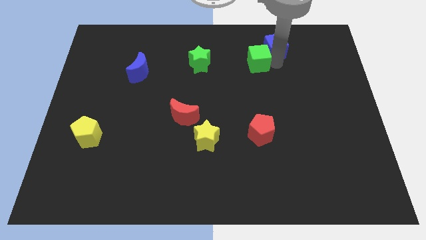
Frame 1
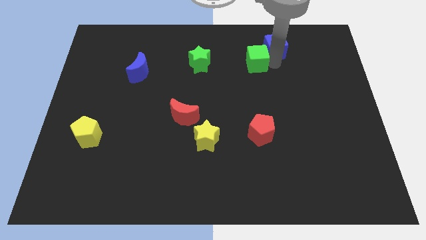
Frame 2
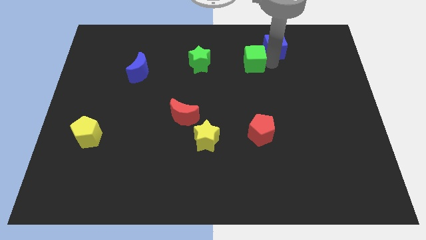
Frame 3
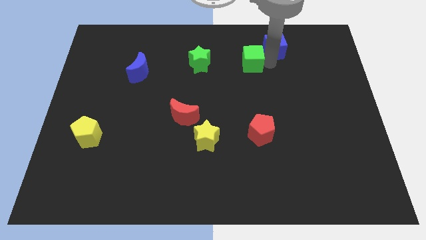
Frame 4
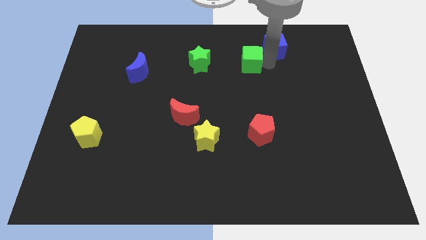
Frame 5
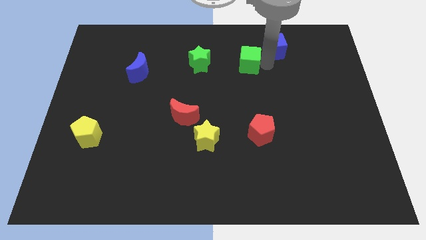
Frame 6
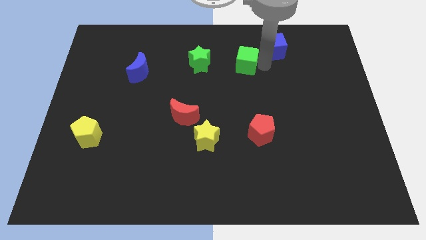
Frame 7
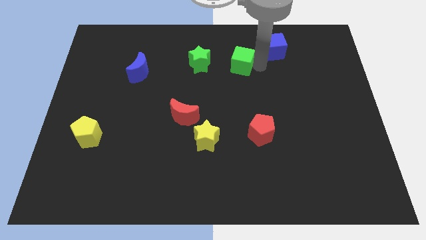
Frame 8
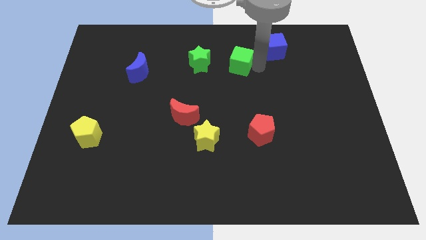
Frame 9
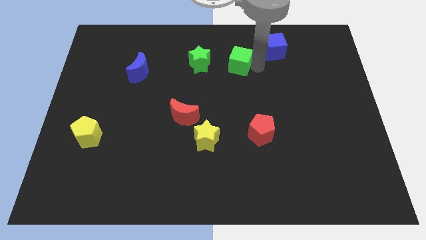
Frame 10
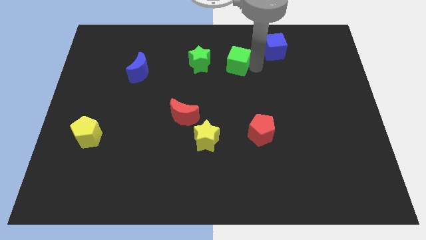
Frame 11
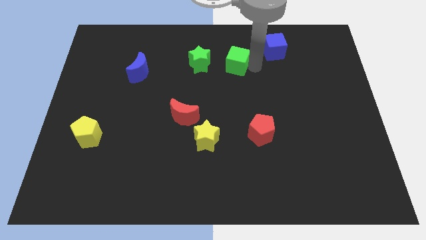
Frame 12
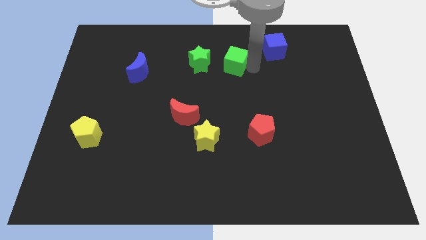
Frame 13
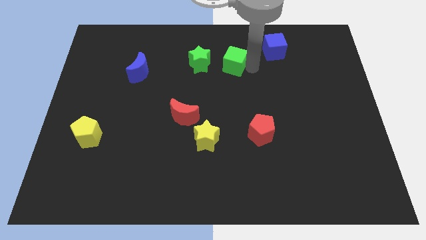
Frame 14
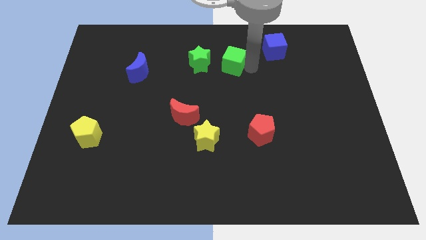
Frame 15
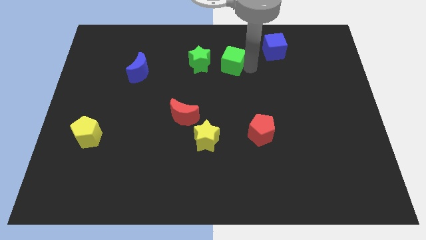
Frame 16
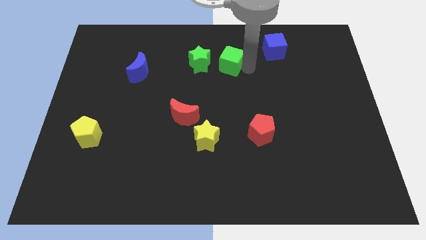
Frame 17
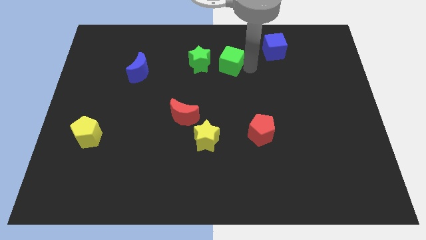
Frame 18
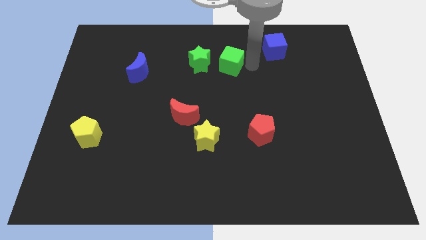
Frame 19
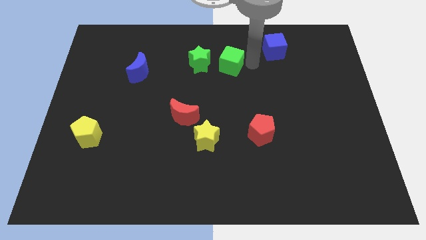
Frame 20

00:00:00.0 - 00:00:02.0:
place the green cube right to the green star

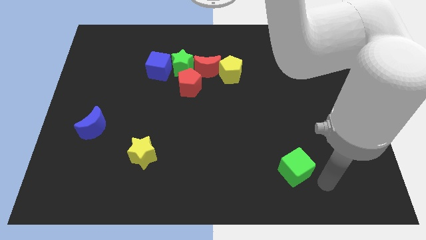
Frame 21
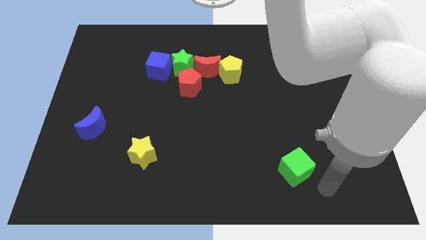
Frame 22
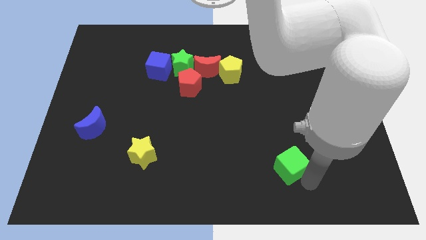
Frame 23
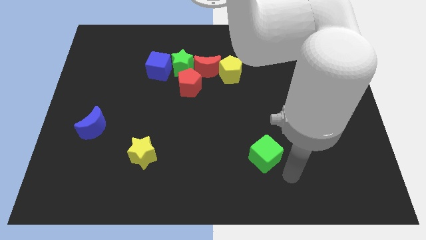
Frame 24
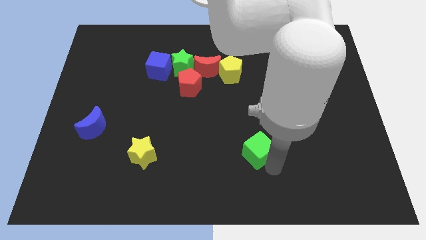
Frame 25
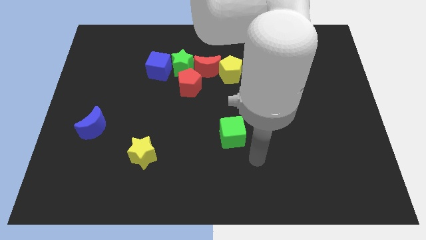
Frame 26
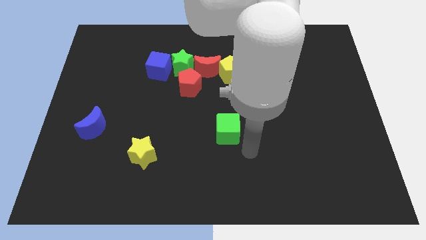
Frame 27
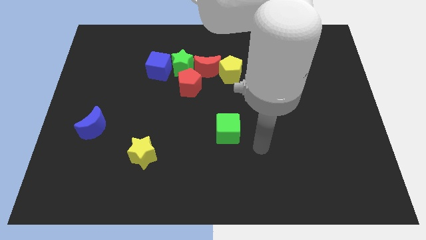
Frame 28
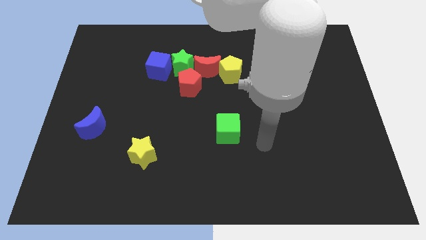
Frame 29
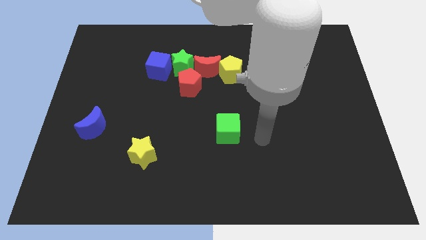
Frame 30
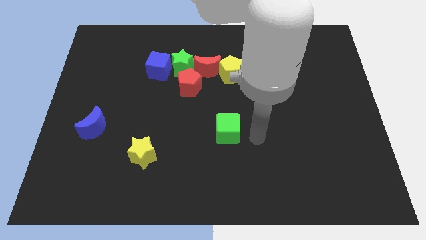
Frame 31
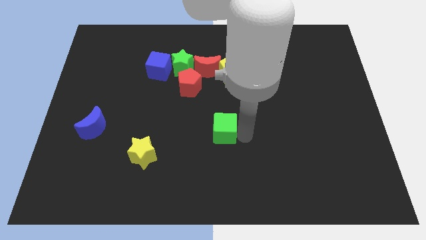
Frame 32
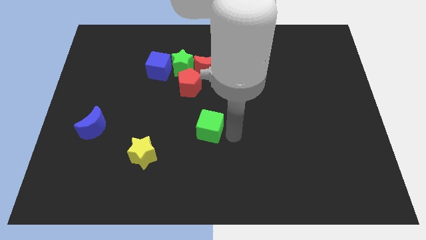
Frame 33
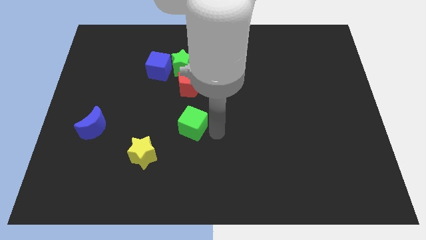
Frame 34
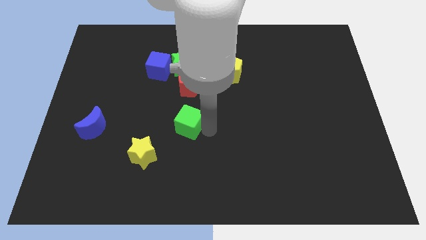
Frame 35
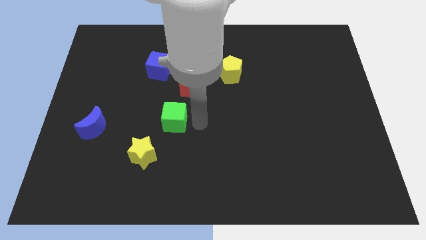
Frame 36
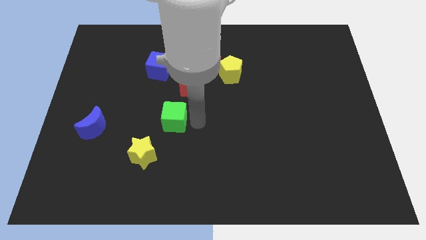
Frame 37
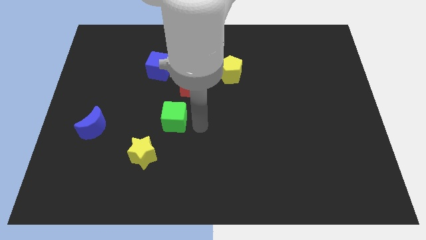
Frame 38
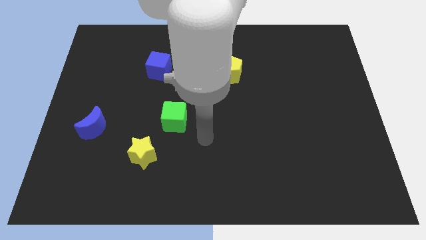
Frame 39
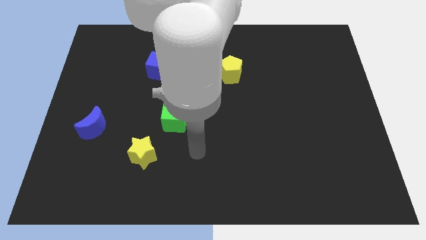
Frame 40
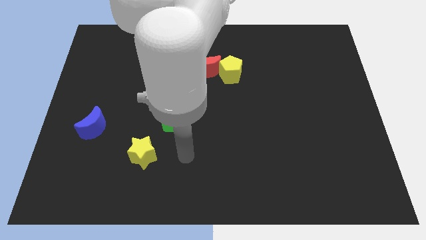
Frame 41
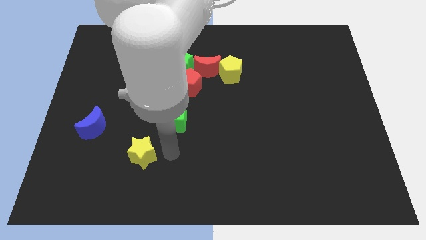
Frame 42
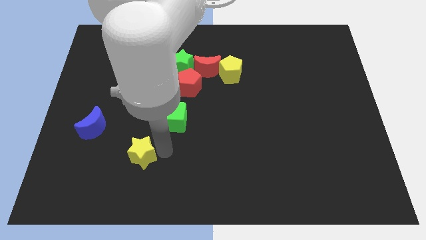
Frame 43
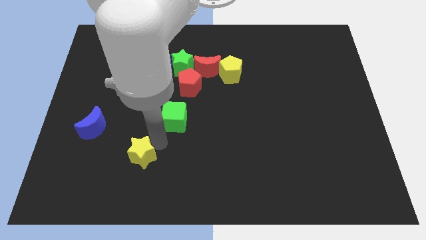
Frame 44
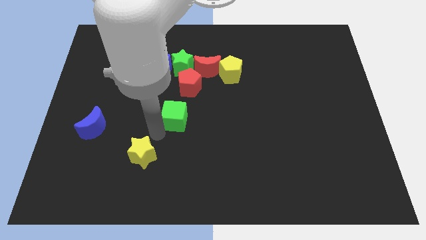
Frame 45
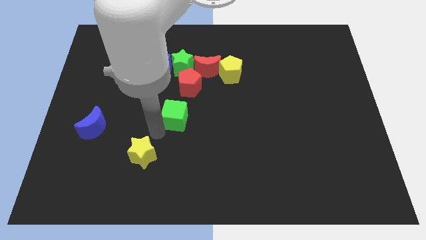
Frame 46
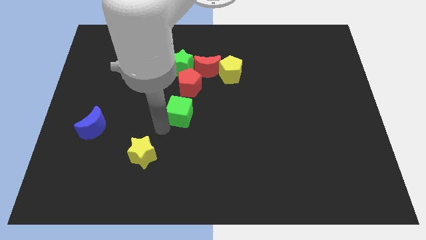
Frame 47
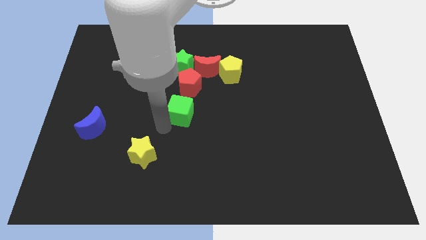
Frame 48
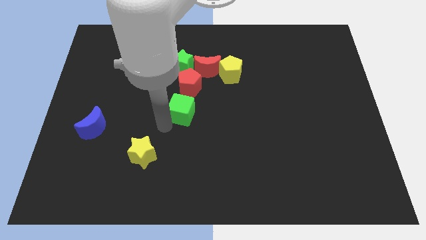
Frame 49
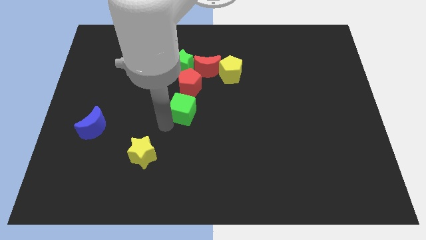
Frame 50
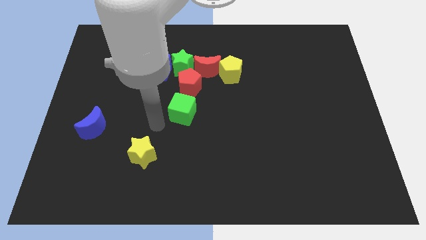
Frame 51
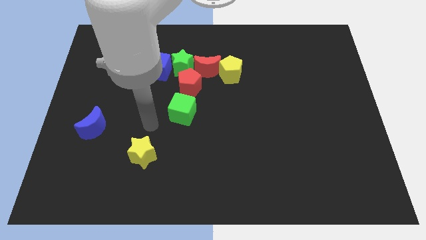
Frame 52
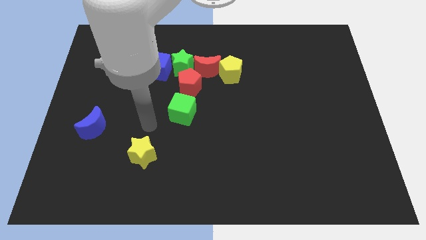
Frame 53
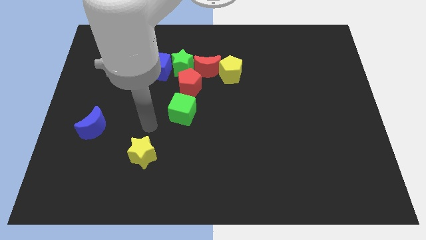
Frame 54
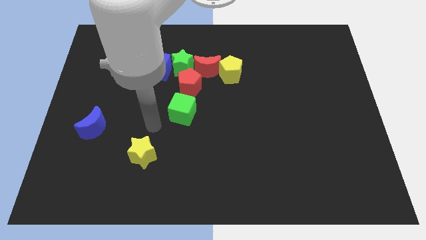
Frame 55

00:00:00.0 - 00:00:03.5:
slide the green cube below the red pentagon

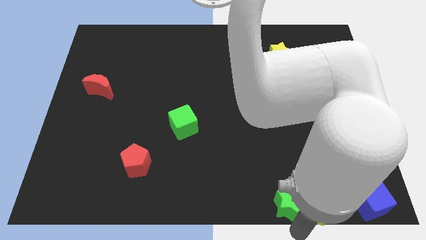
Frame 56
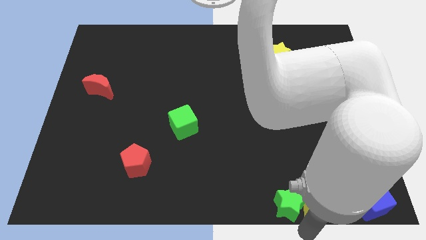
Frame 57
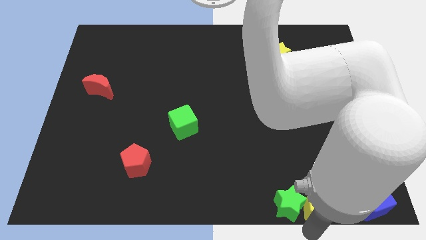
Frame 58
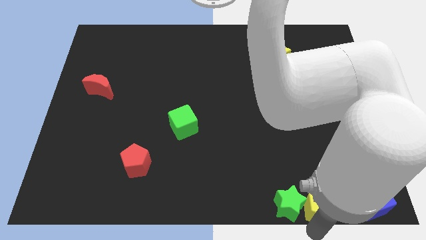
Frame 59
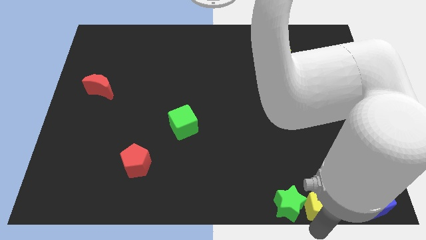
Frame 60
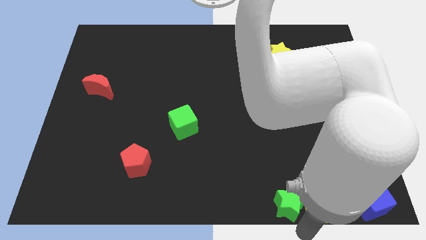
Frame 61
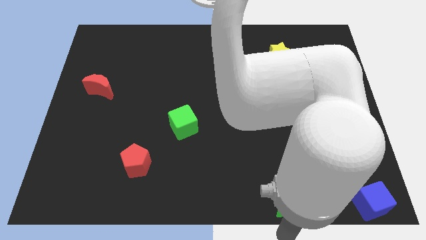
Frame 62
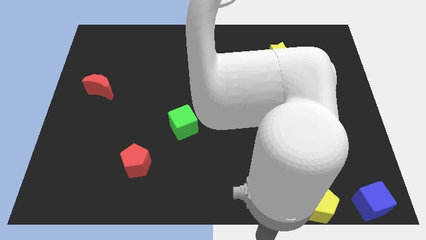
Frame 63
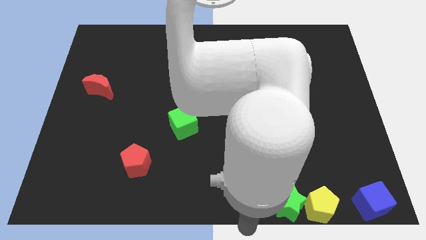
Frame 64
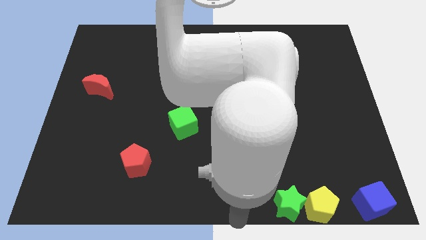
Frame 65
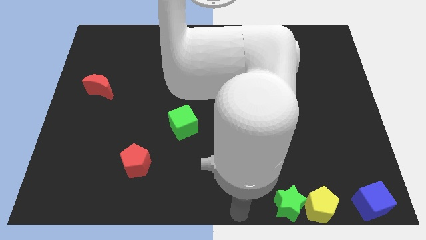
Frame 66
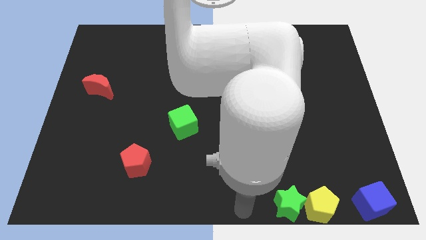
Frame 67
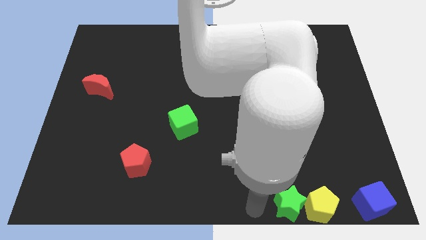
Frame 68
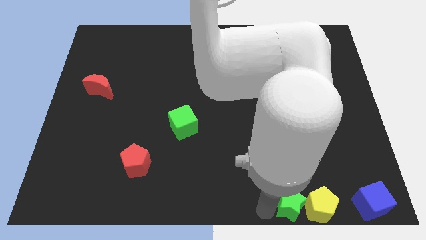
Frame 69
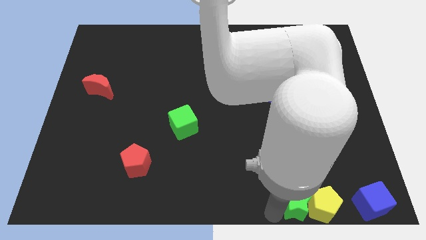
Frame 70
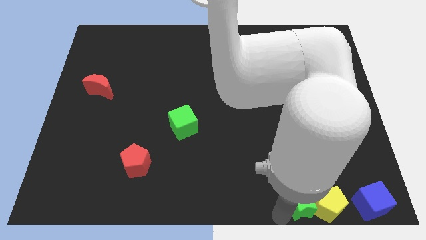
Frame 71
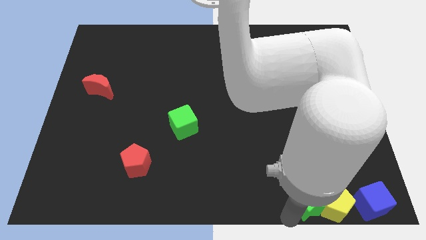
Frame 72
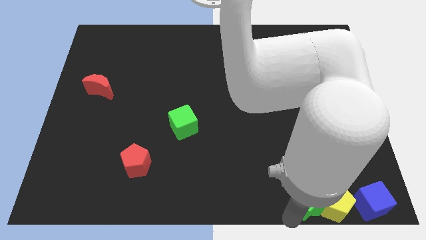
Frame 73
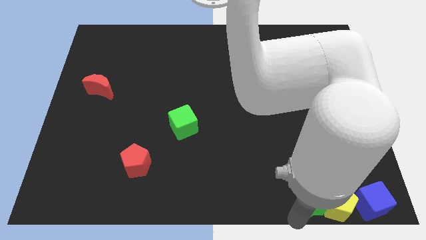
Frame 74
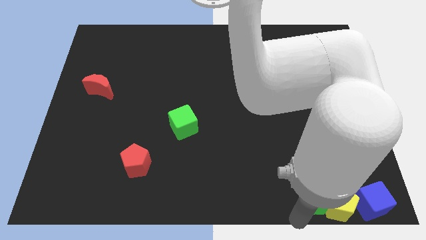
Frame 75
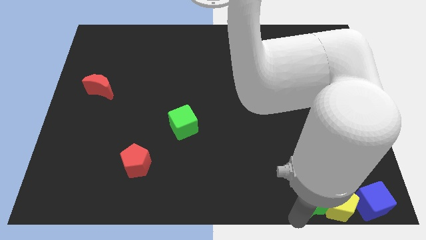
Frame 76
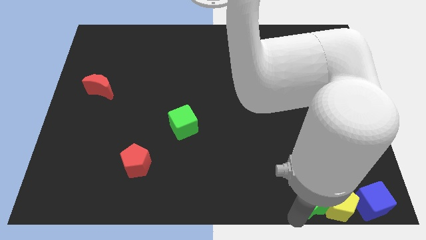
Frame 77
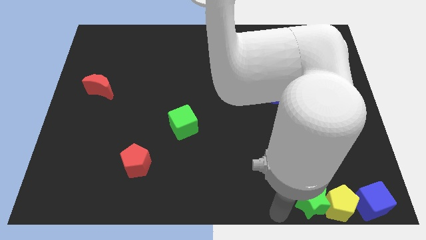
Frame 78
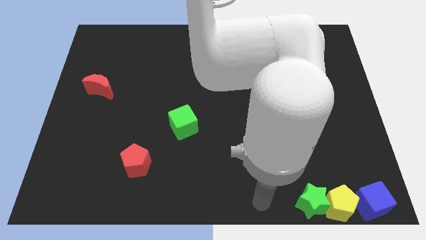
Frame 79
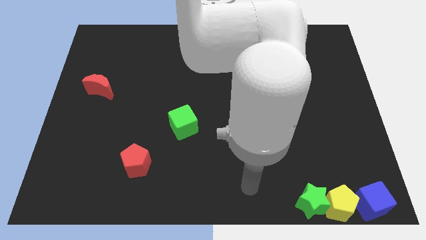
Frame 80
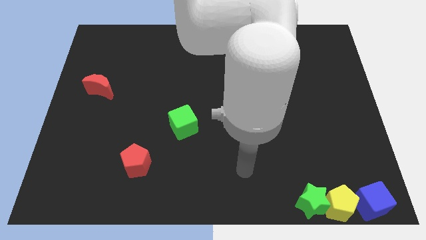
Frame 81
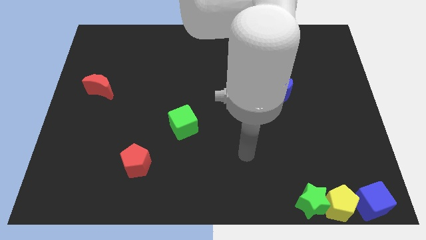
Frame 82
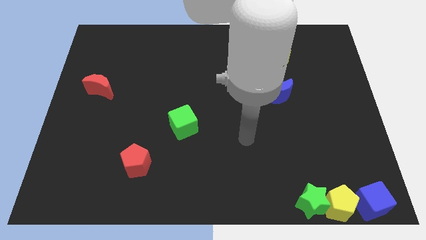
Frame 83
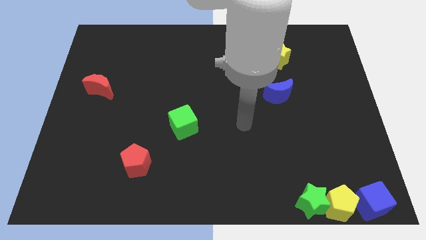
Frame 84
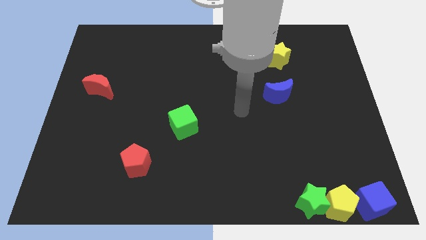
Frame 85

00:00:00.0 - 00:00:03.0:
push the green star and yellow pentagon left to the blue cube

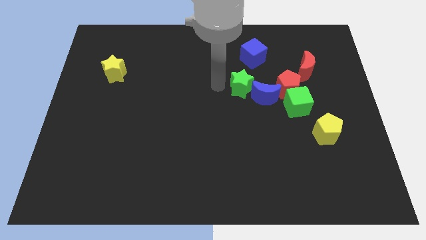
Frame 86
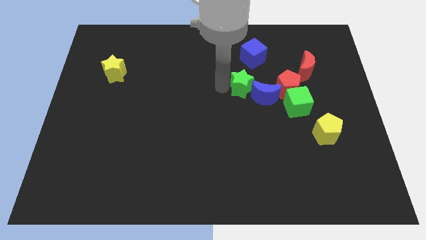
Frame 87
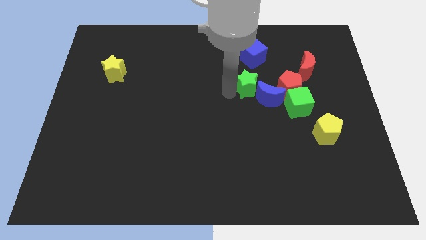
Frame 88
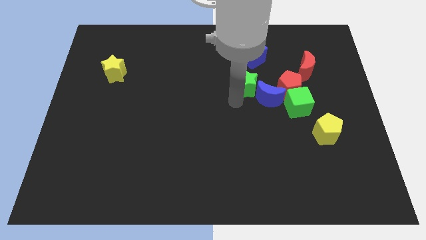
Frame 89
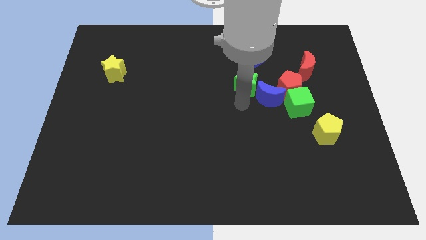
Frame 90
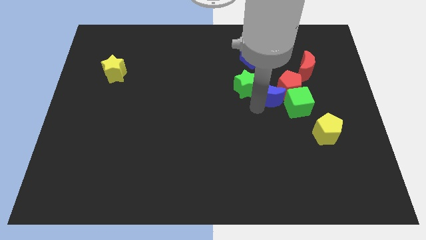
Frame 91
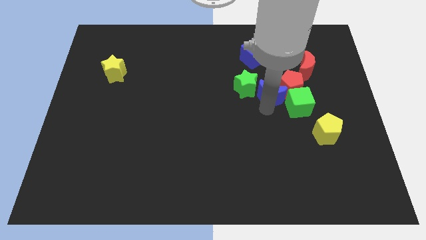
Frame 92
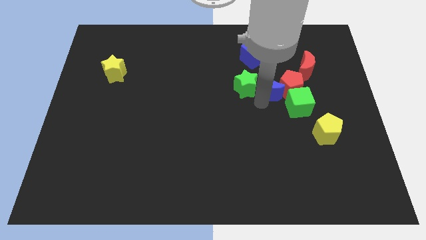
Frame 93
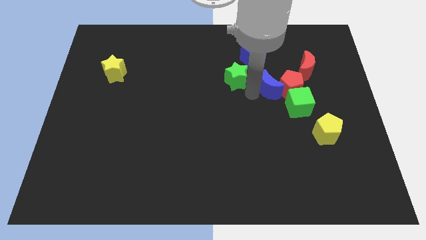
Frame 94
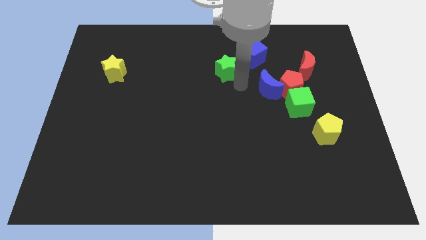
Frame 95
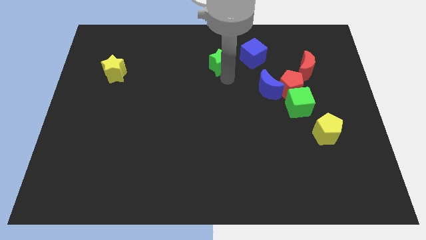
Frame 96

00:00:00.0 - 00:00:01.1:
separate green star and the blue moon
